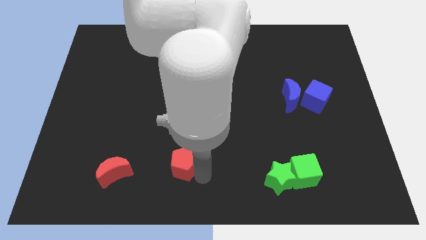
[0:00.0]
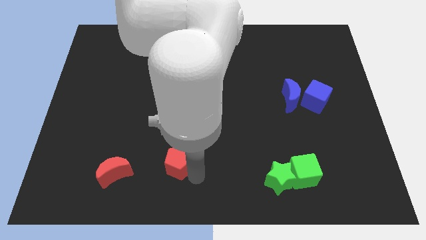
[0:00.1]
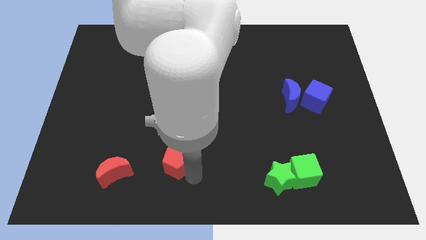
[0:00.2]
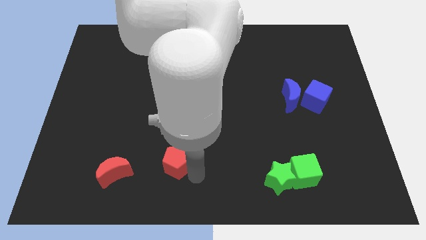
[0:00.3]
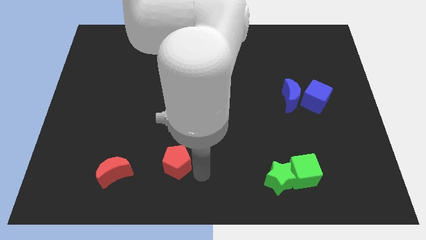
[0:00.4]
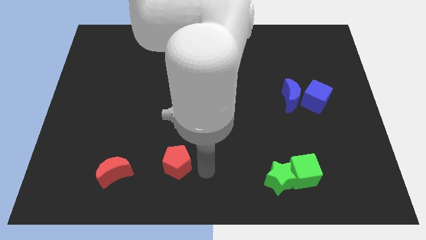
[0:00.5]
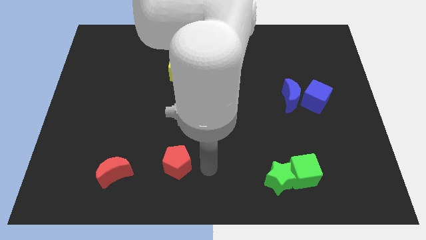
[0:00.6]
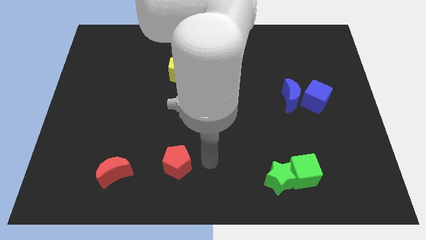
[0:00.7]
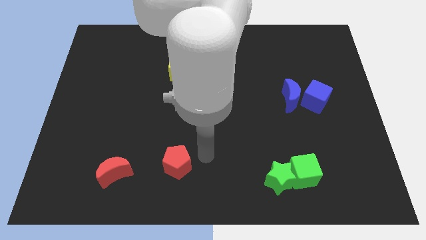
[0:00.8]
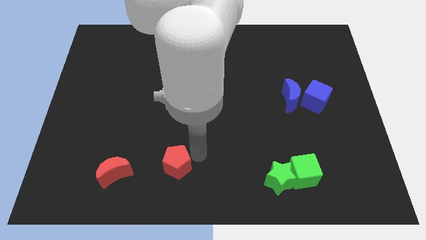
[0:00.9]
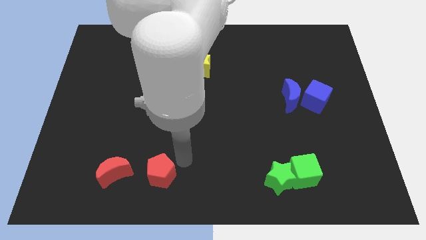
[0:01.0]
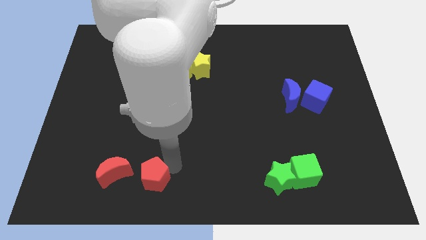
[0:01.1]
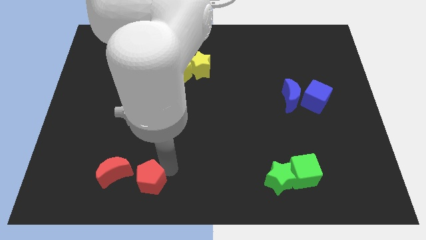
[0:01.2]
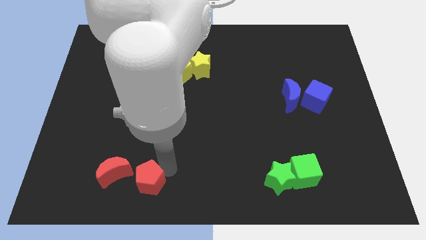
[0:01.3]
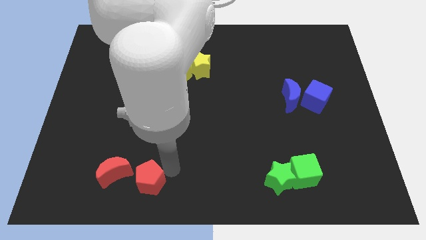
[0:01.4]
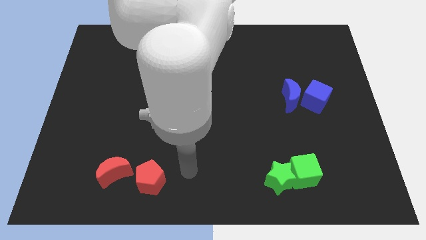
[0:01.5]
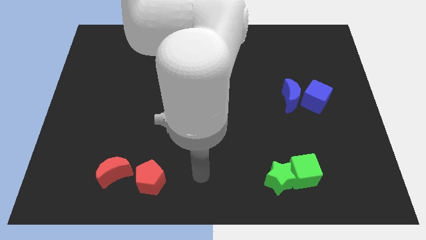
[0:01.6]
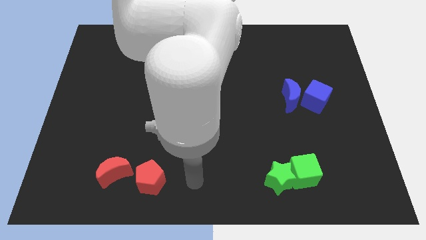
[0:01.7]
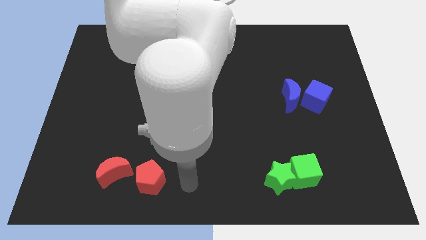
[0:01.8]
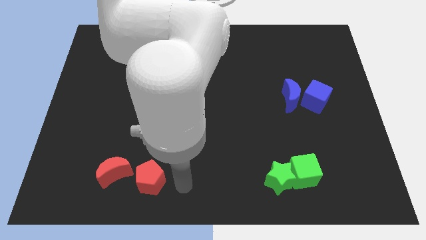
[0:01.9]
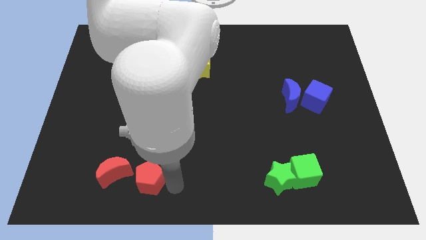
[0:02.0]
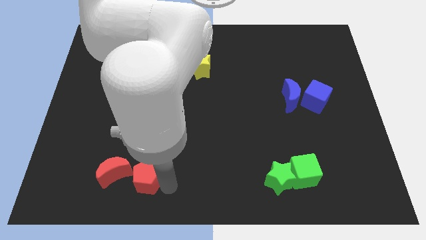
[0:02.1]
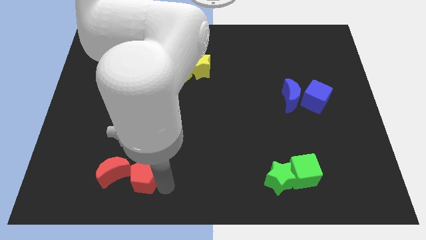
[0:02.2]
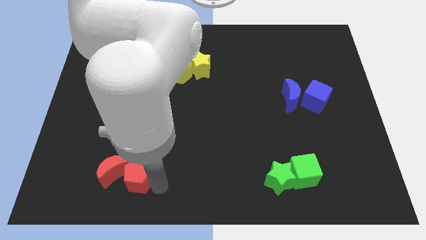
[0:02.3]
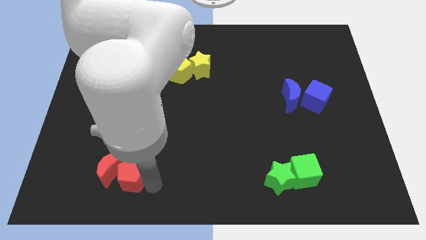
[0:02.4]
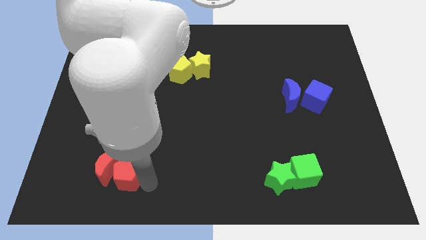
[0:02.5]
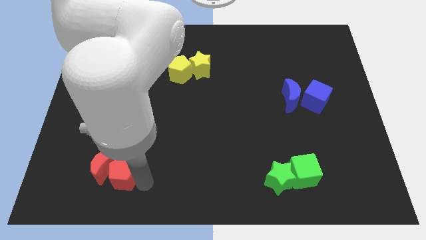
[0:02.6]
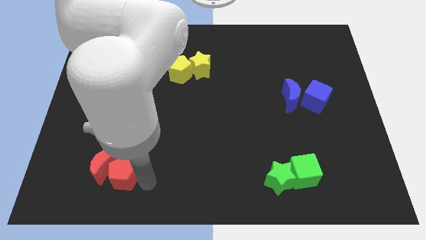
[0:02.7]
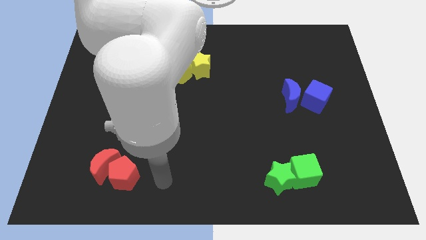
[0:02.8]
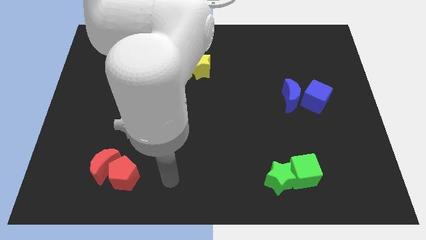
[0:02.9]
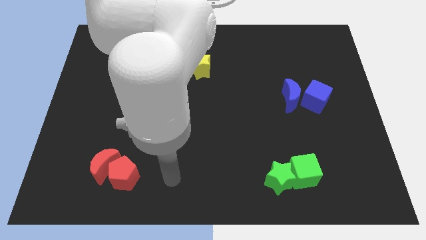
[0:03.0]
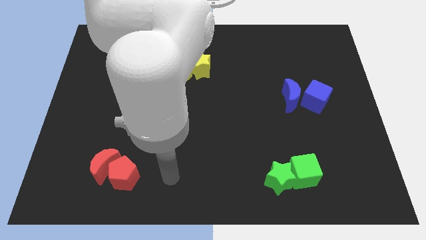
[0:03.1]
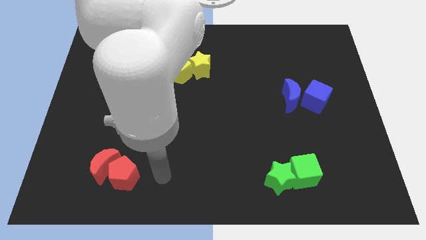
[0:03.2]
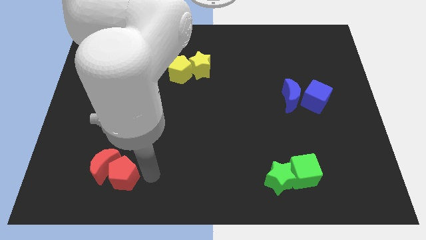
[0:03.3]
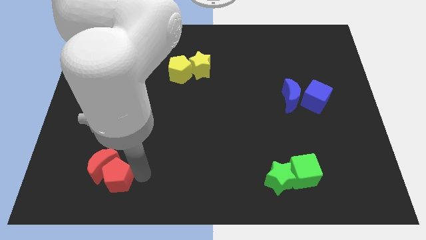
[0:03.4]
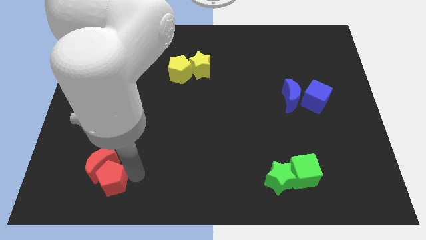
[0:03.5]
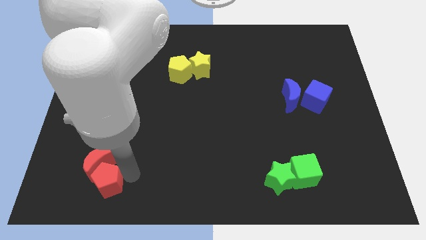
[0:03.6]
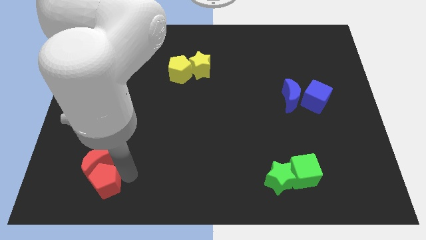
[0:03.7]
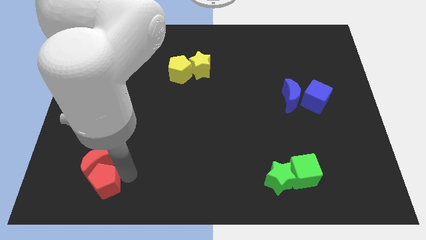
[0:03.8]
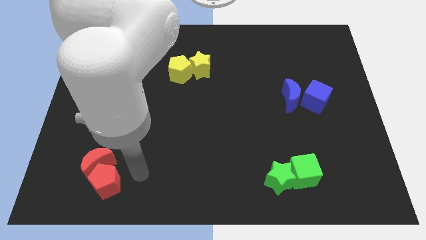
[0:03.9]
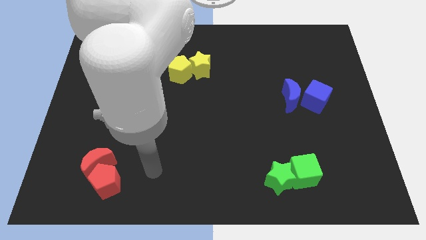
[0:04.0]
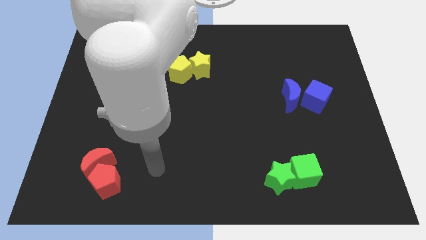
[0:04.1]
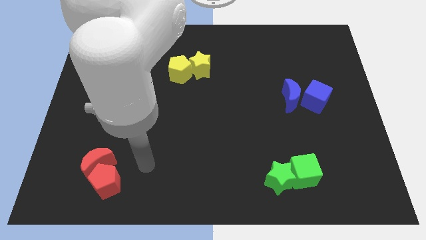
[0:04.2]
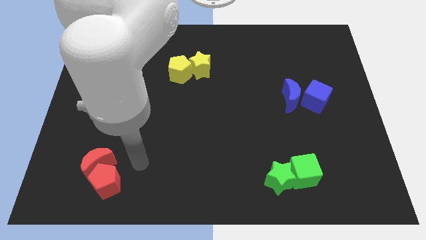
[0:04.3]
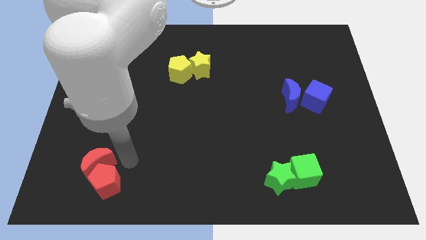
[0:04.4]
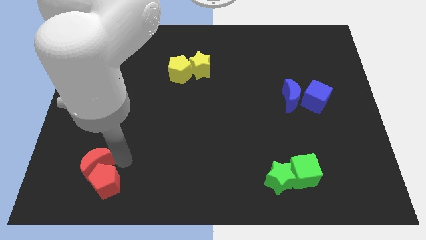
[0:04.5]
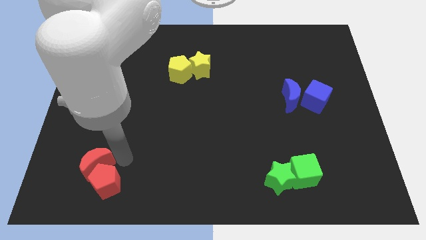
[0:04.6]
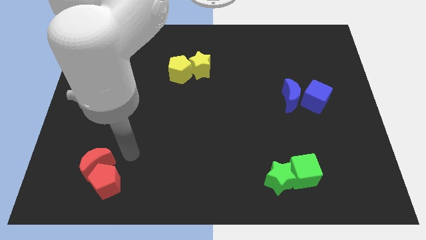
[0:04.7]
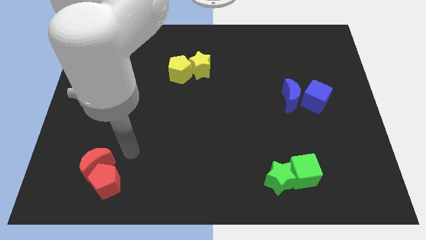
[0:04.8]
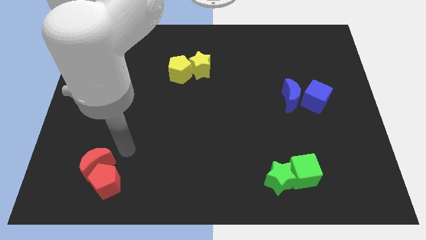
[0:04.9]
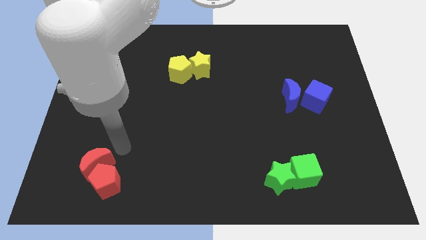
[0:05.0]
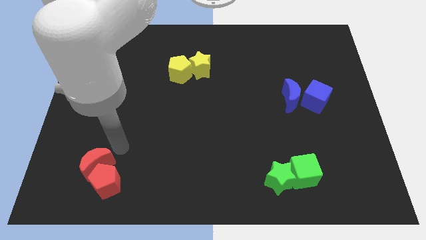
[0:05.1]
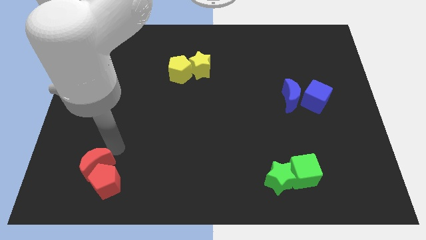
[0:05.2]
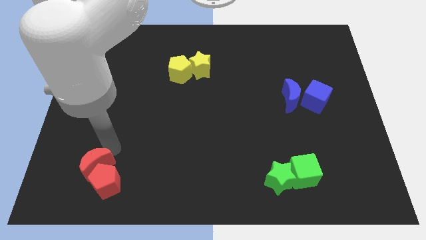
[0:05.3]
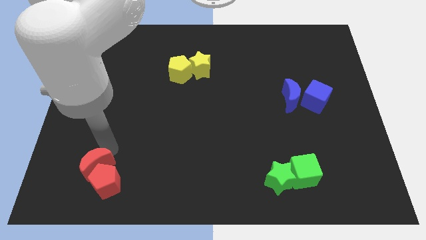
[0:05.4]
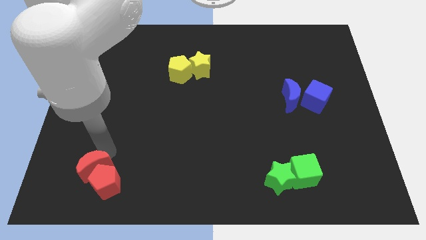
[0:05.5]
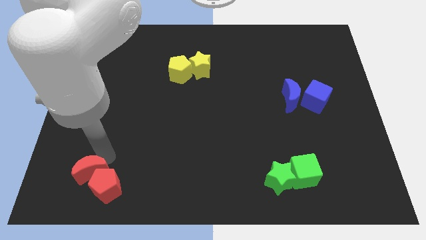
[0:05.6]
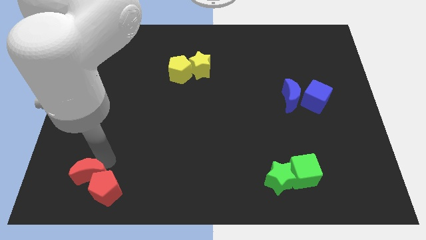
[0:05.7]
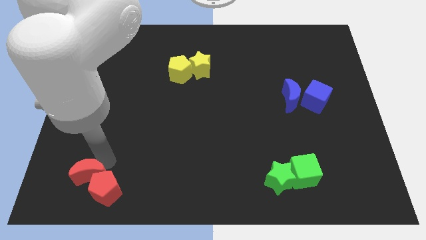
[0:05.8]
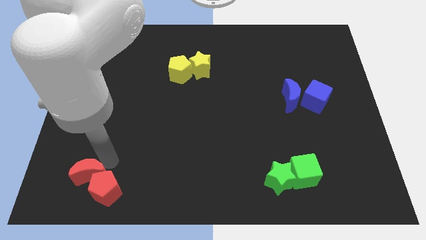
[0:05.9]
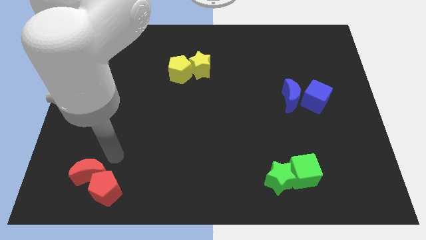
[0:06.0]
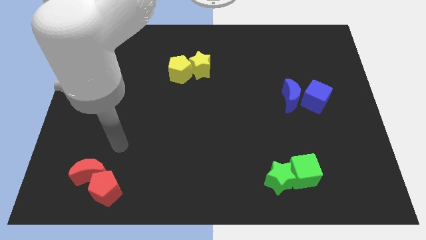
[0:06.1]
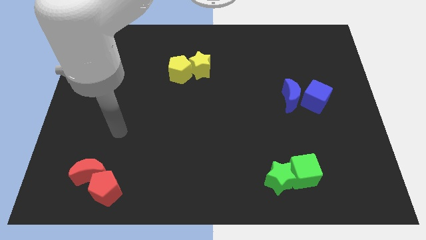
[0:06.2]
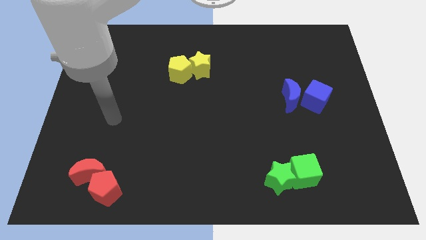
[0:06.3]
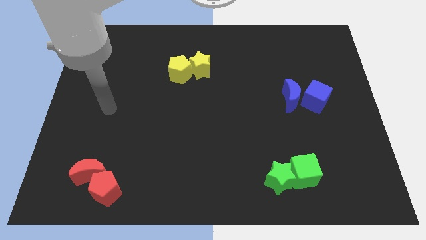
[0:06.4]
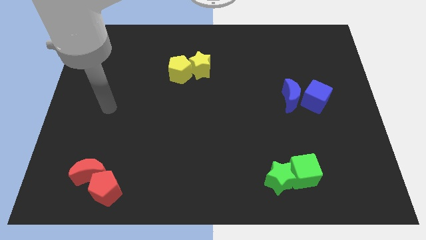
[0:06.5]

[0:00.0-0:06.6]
move red pentagon and red moon to the left side of the board

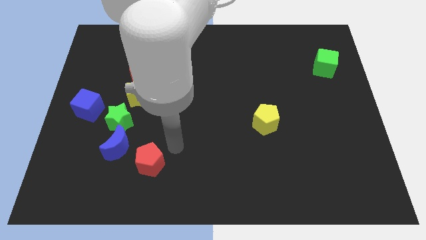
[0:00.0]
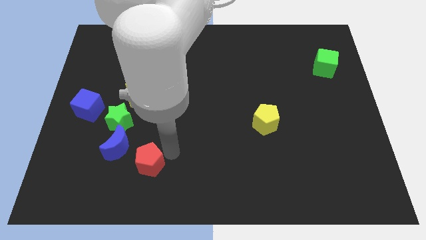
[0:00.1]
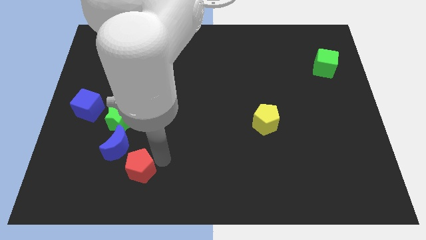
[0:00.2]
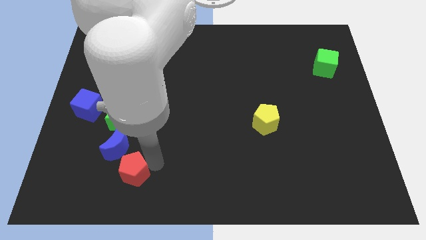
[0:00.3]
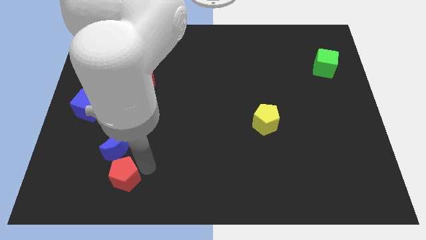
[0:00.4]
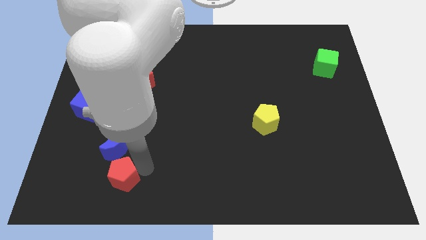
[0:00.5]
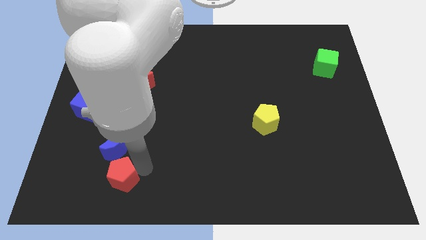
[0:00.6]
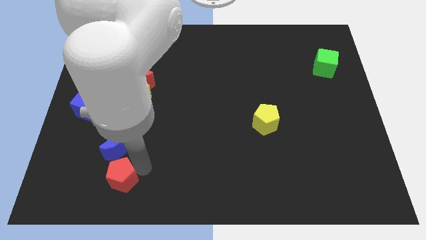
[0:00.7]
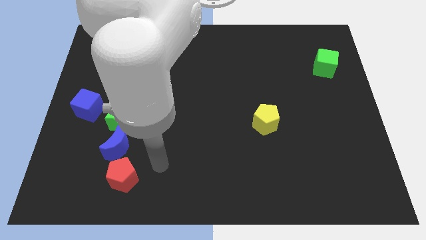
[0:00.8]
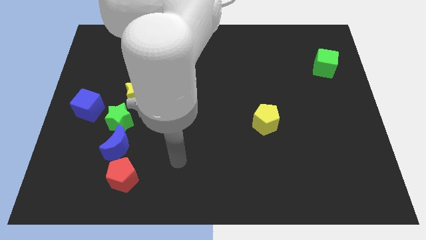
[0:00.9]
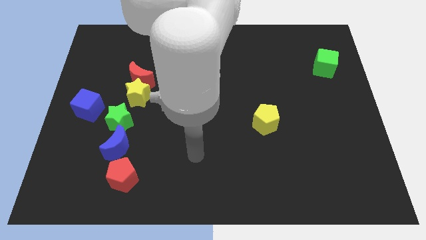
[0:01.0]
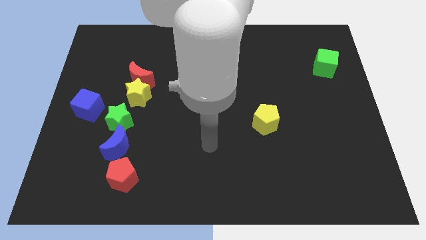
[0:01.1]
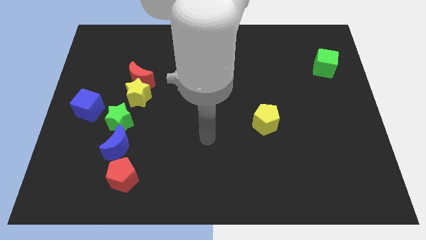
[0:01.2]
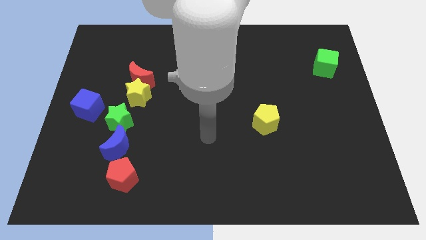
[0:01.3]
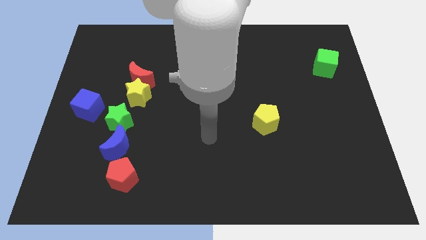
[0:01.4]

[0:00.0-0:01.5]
move the red pentagon diagonally bottom right to the blue moon

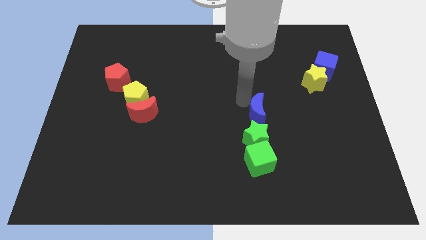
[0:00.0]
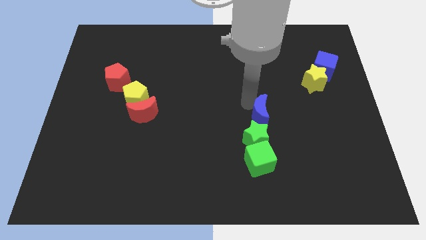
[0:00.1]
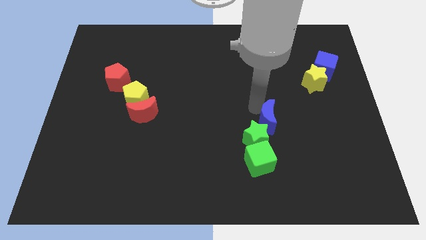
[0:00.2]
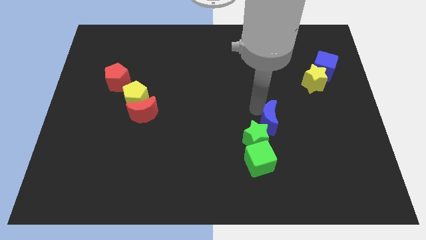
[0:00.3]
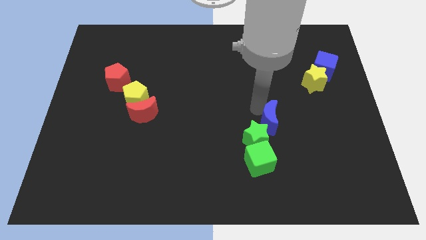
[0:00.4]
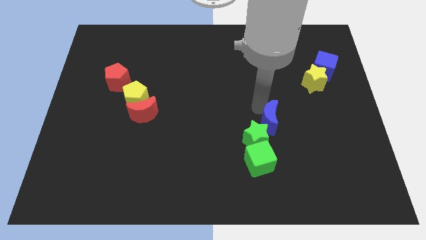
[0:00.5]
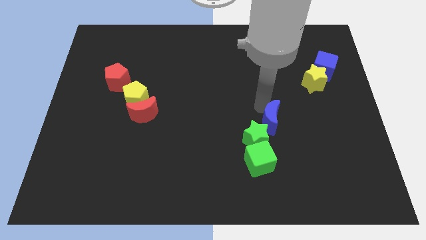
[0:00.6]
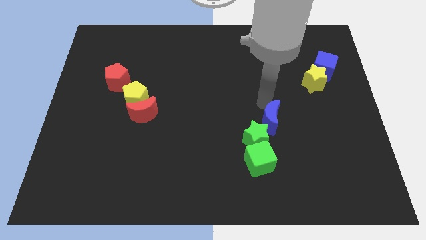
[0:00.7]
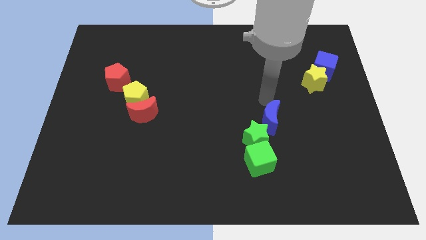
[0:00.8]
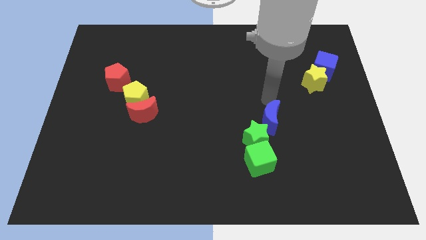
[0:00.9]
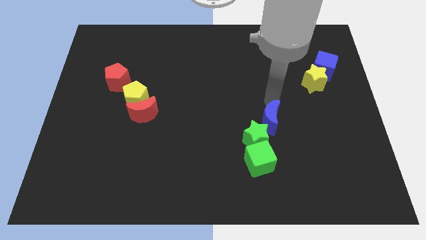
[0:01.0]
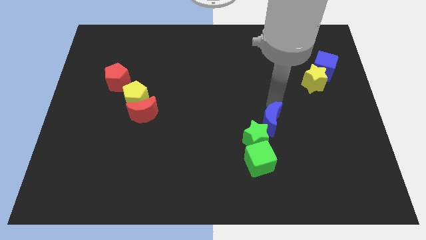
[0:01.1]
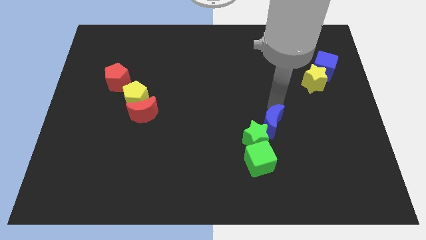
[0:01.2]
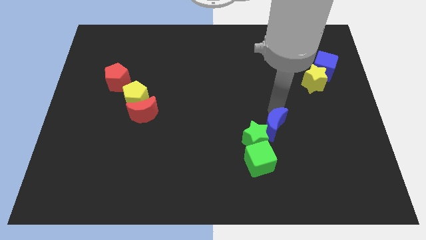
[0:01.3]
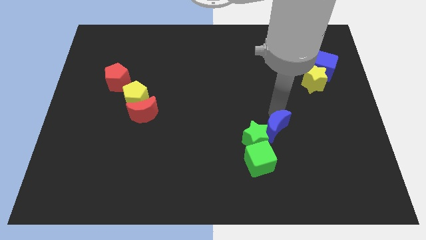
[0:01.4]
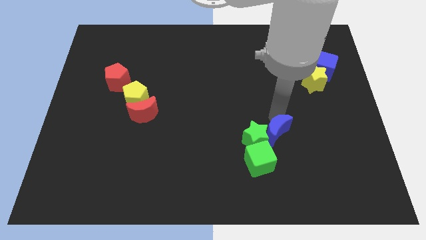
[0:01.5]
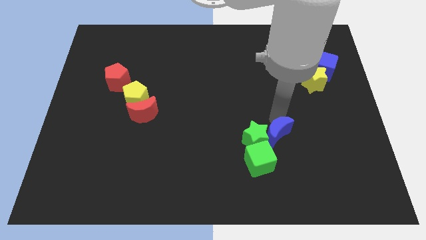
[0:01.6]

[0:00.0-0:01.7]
place the blue moon at the right of the green star
